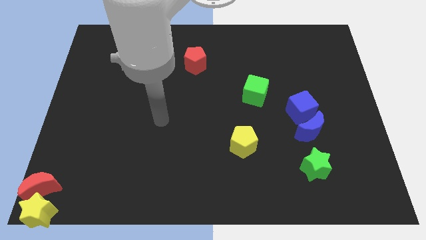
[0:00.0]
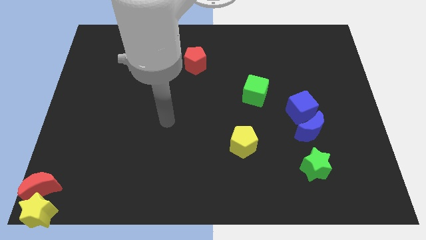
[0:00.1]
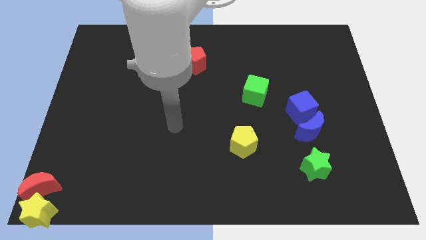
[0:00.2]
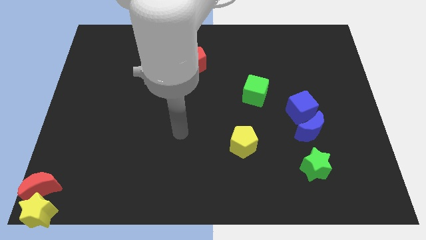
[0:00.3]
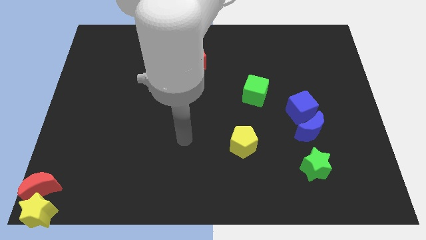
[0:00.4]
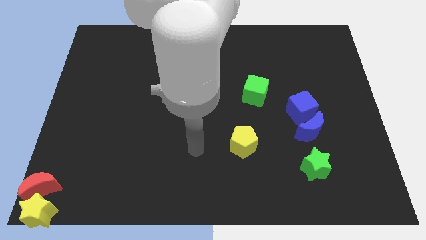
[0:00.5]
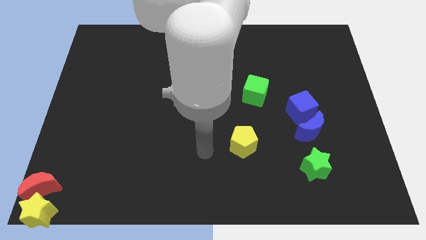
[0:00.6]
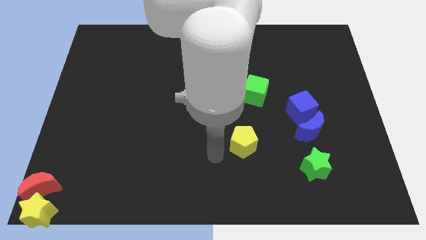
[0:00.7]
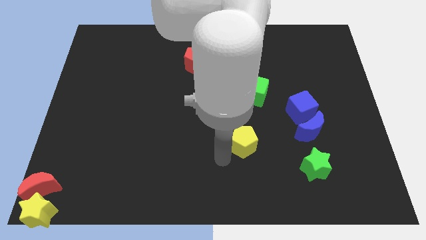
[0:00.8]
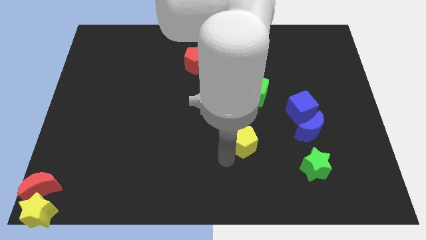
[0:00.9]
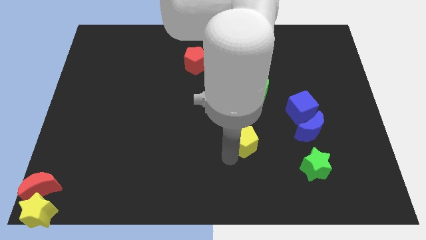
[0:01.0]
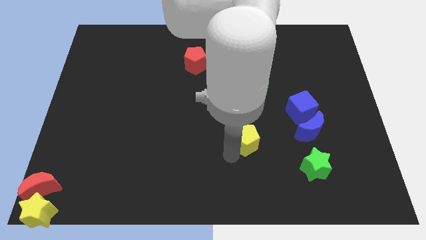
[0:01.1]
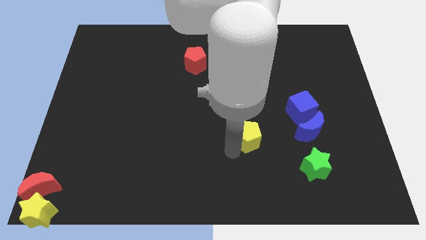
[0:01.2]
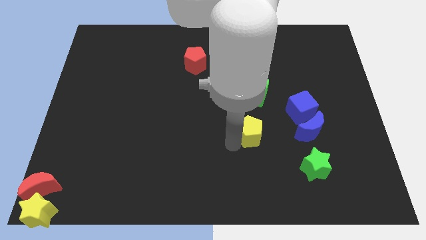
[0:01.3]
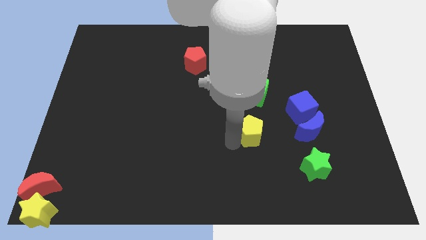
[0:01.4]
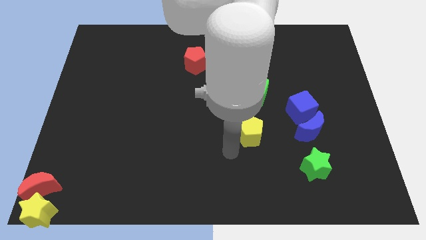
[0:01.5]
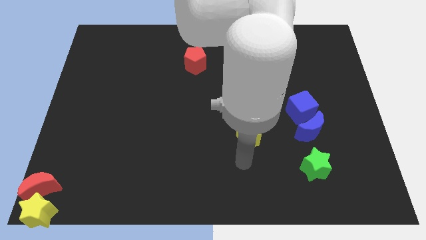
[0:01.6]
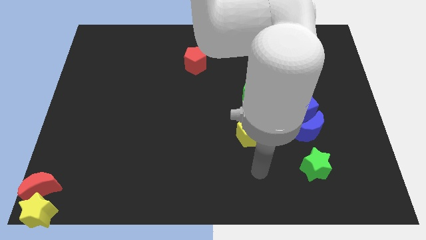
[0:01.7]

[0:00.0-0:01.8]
slightly move the yellow pentagon to the bottom side of the green cube

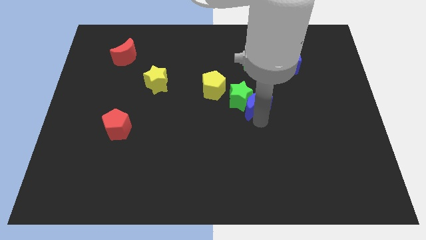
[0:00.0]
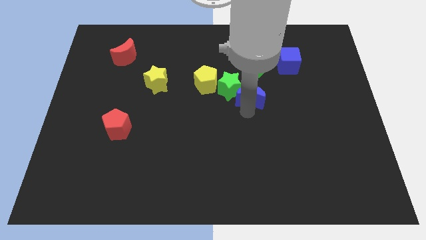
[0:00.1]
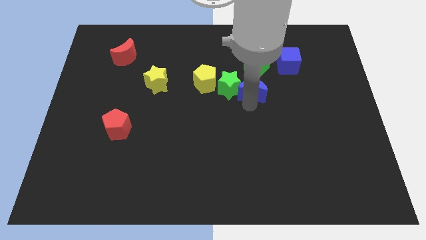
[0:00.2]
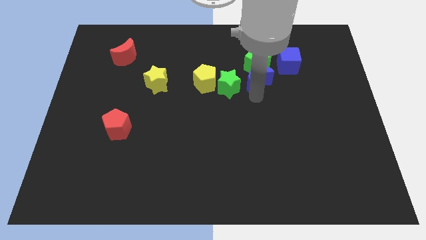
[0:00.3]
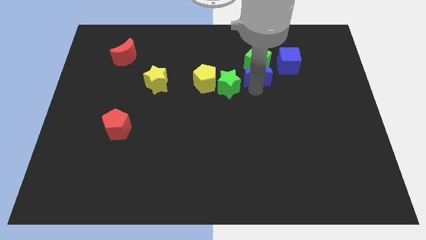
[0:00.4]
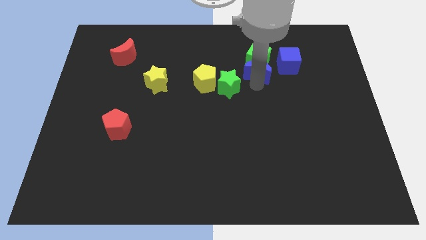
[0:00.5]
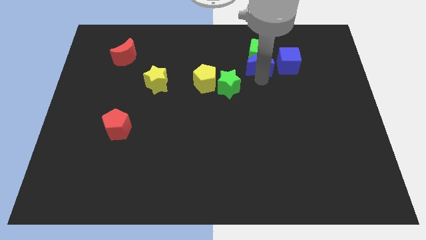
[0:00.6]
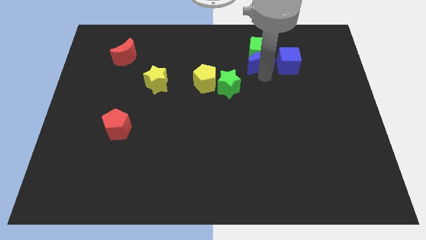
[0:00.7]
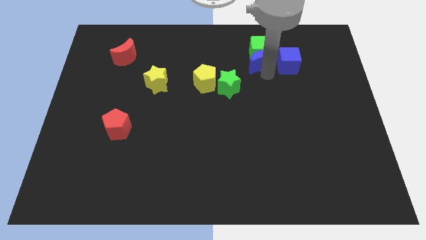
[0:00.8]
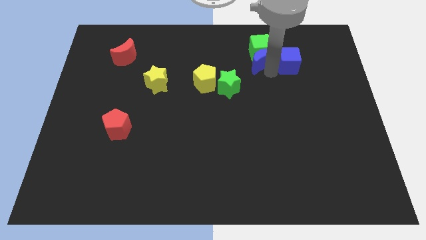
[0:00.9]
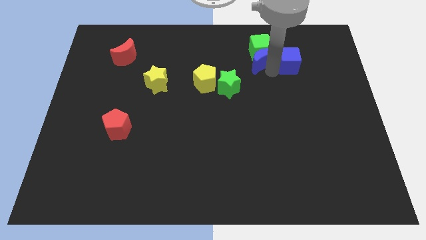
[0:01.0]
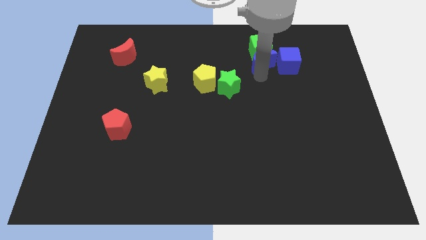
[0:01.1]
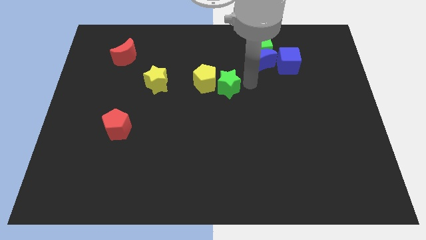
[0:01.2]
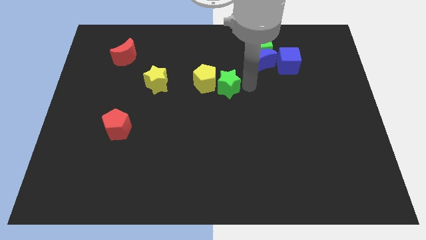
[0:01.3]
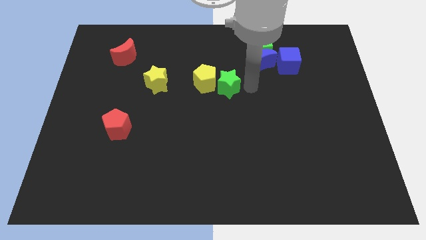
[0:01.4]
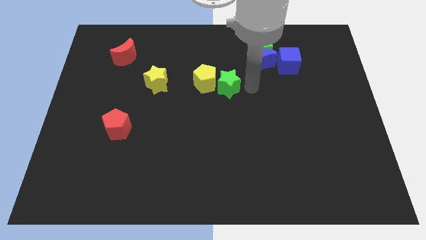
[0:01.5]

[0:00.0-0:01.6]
push the blue crescent into the bottom of the green cube

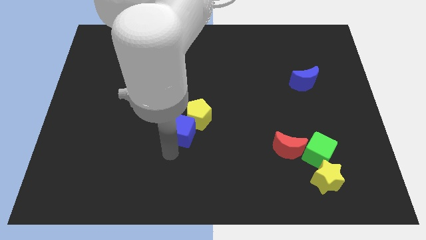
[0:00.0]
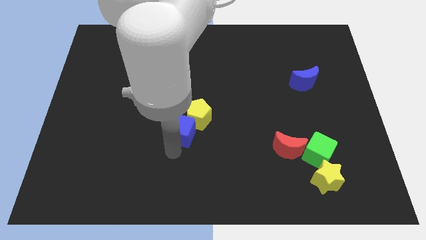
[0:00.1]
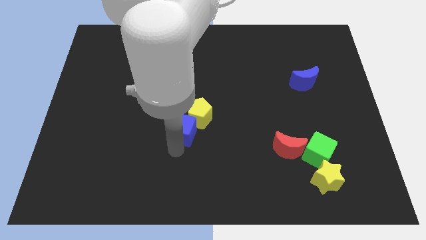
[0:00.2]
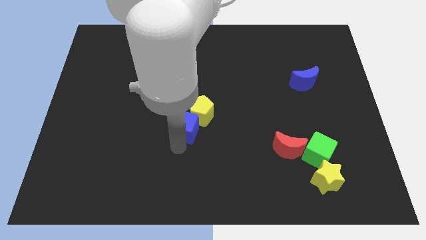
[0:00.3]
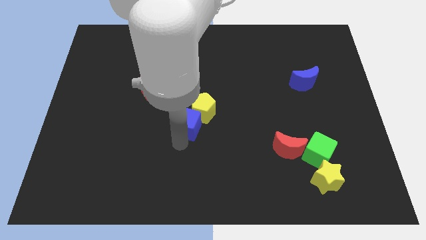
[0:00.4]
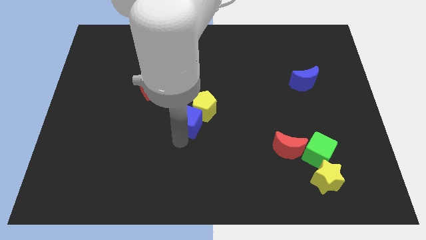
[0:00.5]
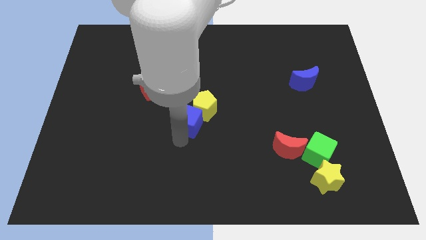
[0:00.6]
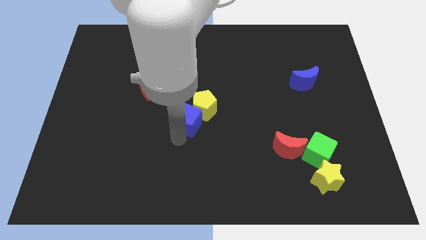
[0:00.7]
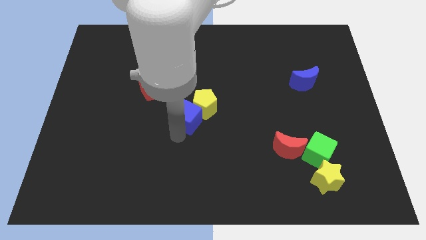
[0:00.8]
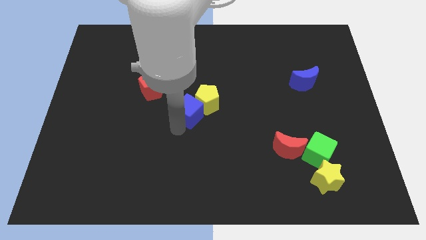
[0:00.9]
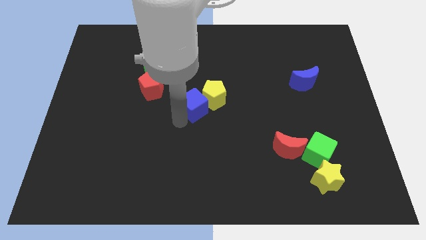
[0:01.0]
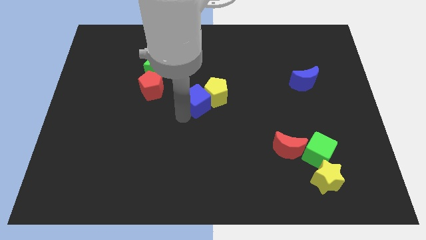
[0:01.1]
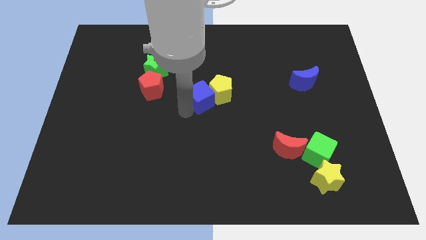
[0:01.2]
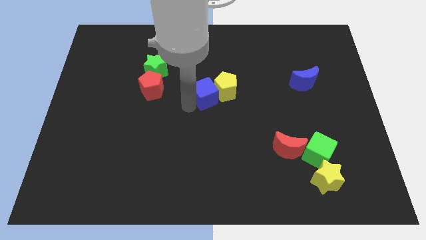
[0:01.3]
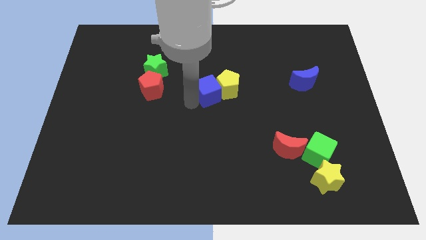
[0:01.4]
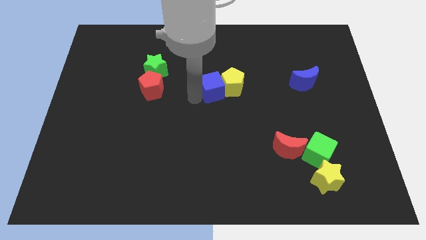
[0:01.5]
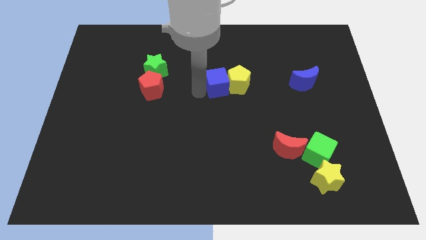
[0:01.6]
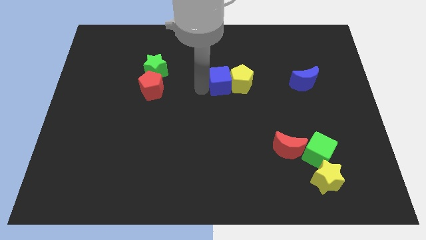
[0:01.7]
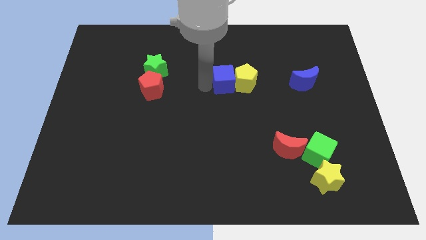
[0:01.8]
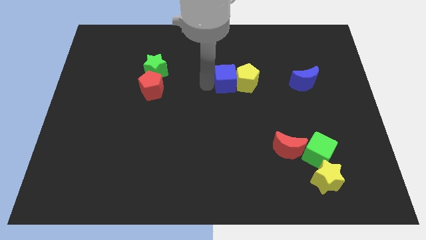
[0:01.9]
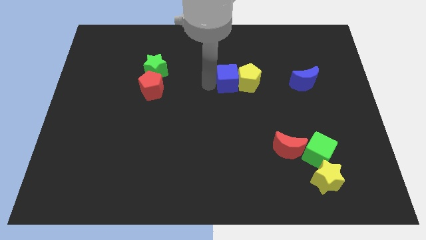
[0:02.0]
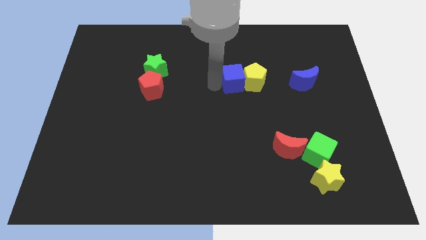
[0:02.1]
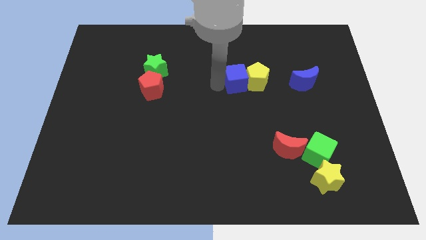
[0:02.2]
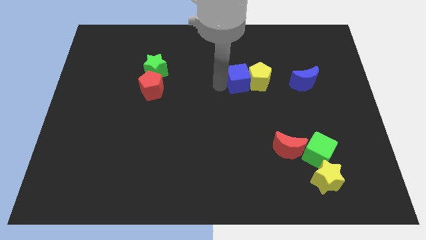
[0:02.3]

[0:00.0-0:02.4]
push blue cube along with yellow pentagon towards blue moon

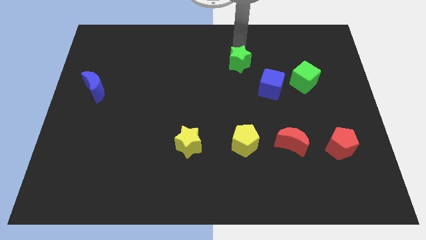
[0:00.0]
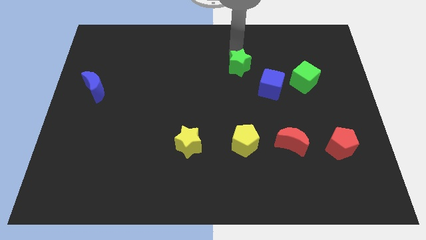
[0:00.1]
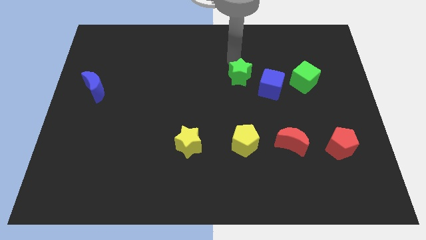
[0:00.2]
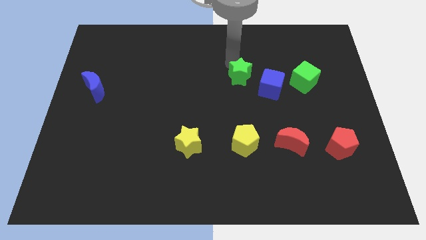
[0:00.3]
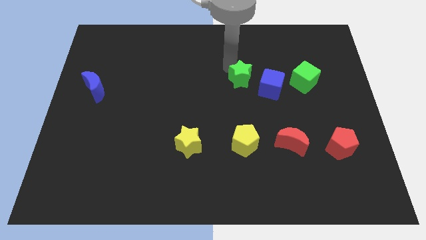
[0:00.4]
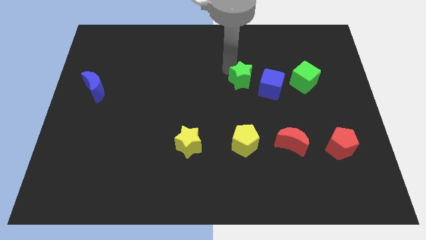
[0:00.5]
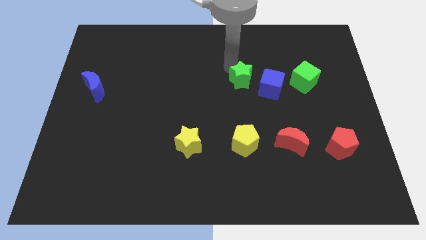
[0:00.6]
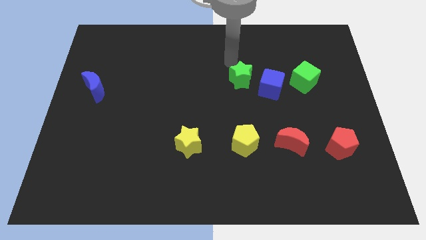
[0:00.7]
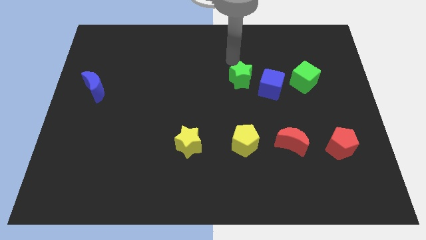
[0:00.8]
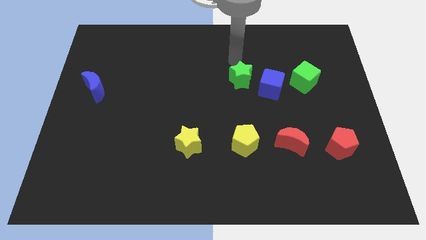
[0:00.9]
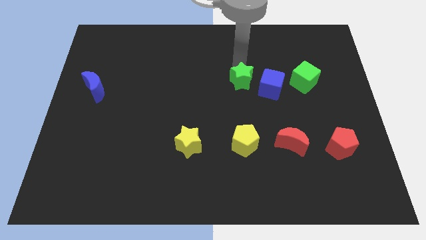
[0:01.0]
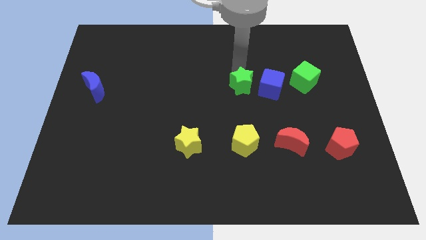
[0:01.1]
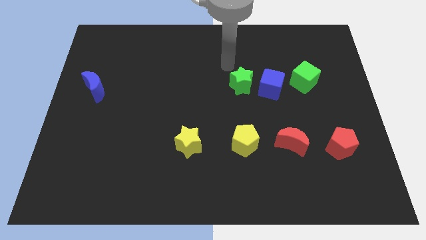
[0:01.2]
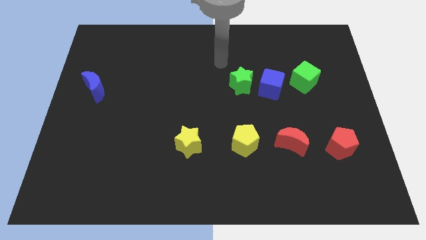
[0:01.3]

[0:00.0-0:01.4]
push the green star towards the blue cube

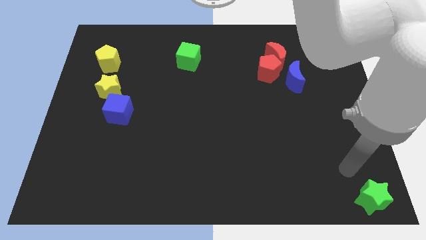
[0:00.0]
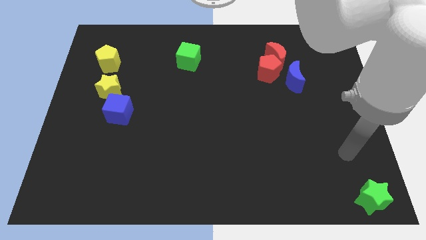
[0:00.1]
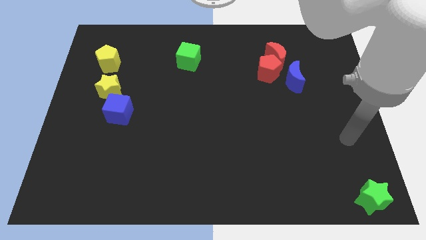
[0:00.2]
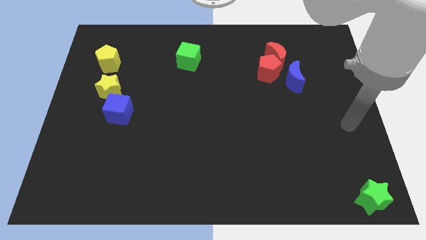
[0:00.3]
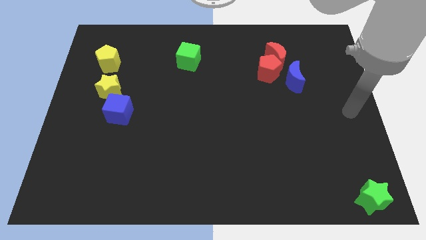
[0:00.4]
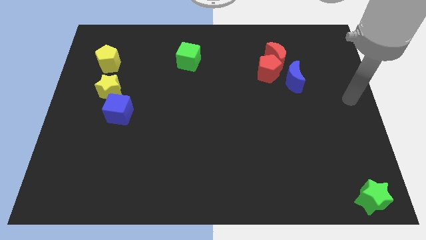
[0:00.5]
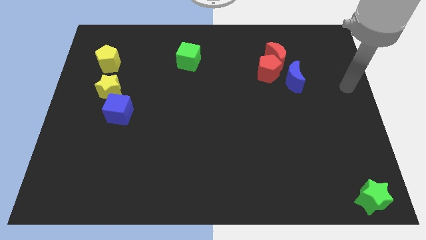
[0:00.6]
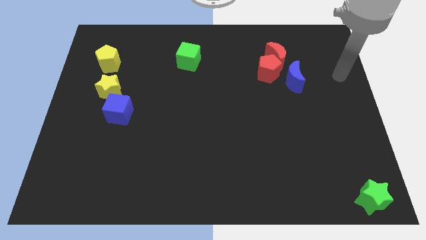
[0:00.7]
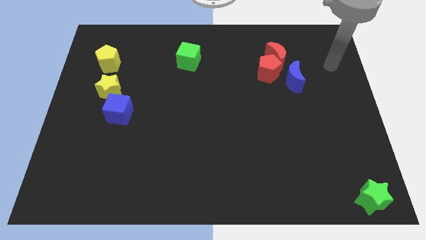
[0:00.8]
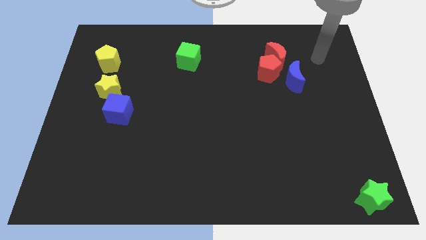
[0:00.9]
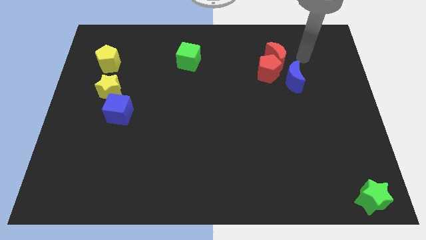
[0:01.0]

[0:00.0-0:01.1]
place your arm to the right of red moon

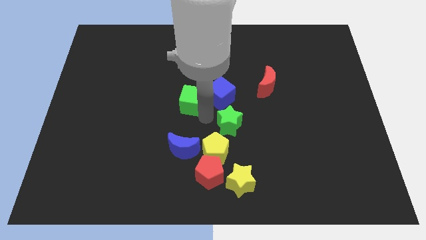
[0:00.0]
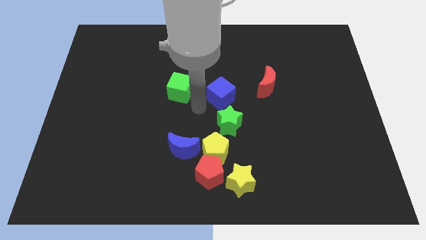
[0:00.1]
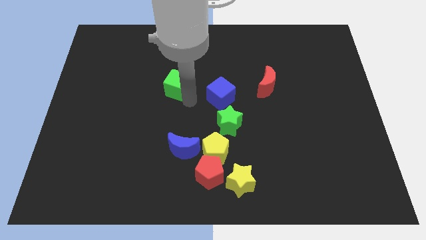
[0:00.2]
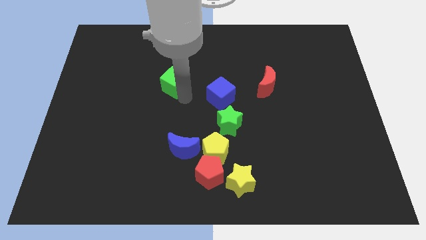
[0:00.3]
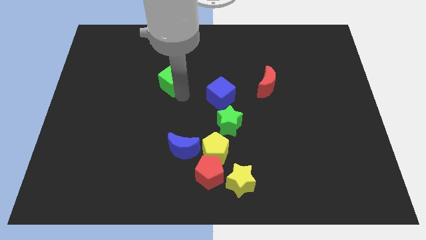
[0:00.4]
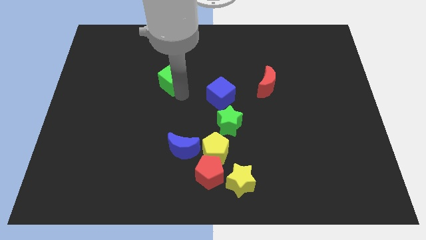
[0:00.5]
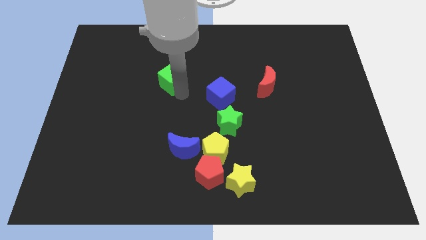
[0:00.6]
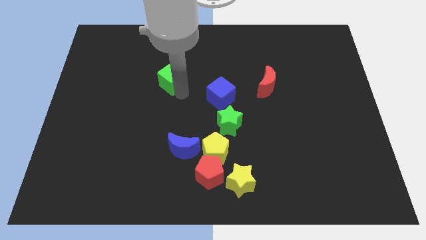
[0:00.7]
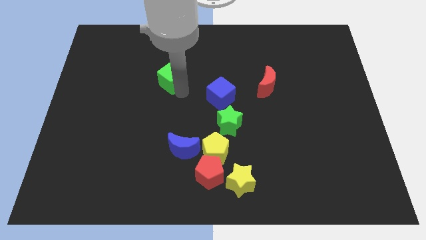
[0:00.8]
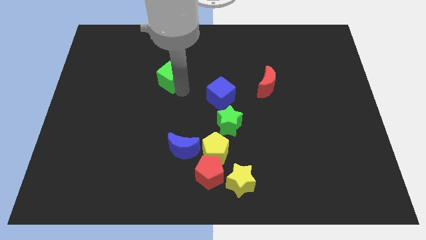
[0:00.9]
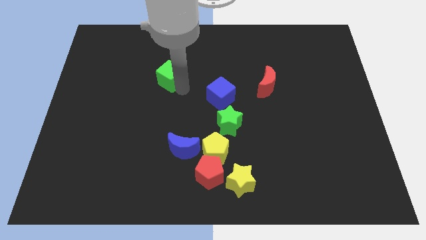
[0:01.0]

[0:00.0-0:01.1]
separate green cube from blue cube
